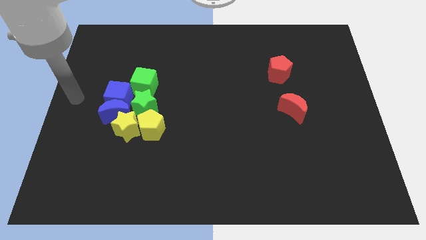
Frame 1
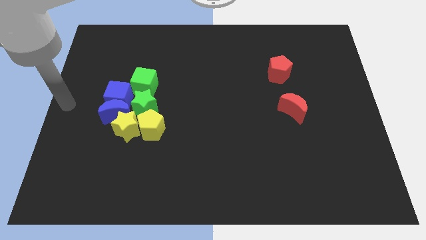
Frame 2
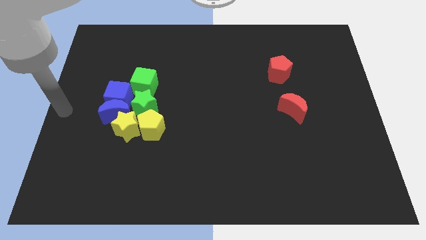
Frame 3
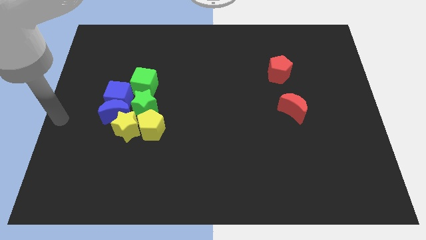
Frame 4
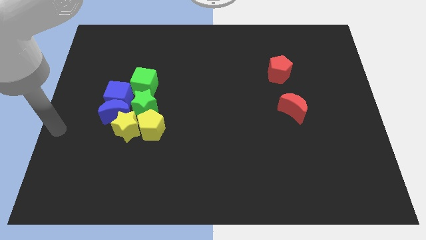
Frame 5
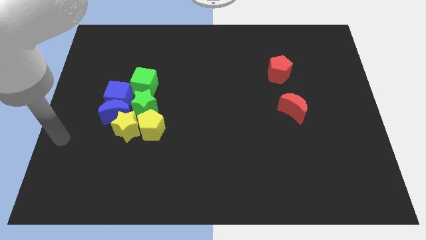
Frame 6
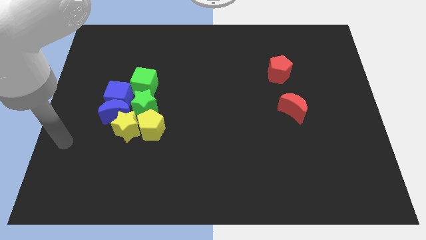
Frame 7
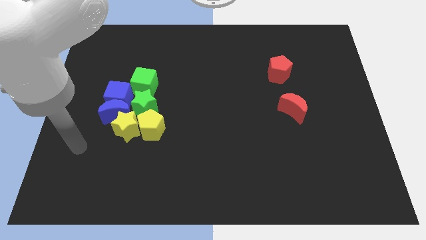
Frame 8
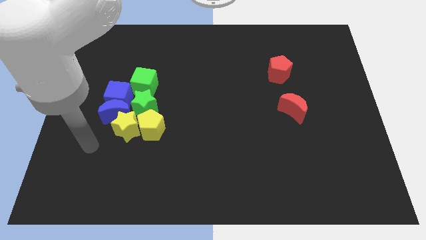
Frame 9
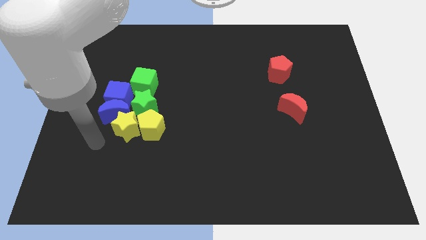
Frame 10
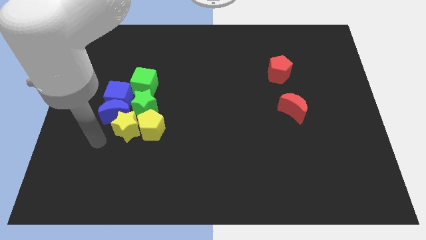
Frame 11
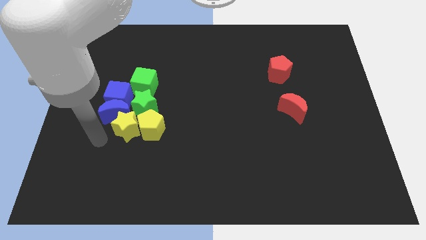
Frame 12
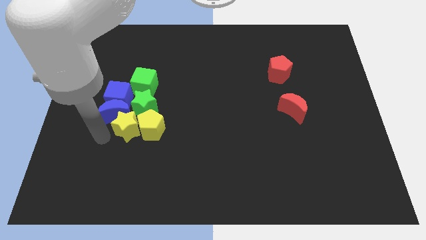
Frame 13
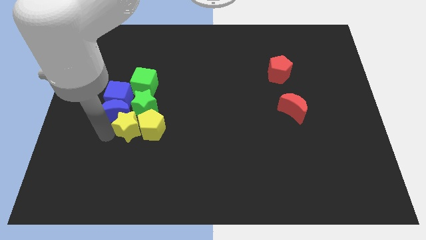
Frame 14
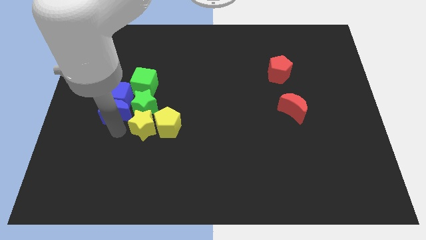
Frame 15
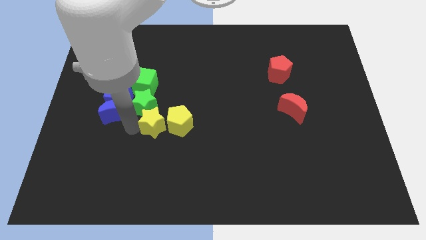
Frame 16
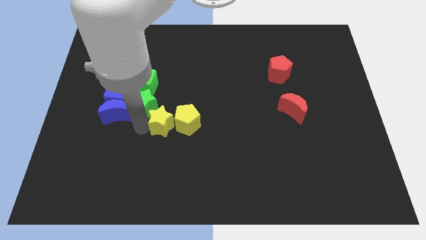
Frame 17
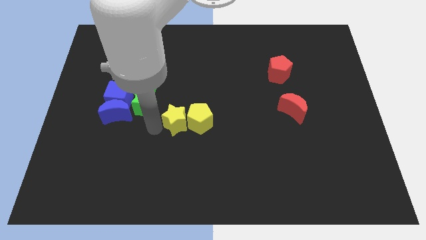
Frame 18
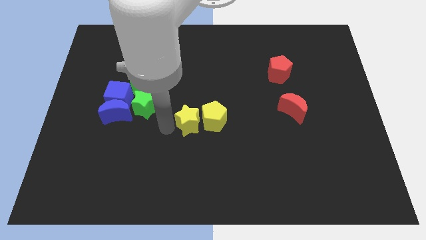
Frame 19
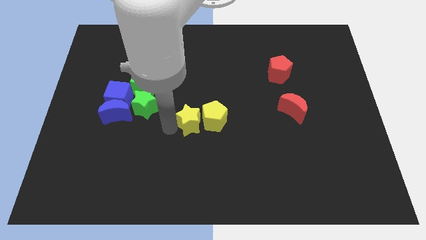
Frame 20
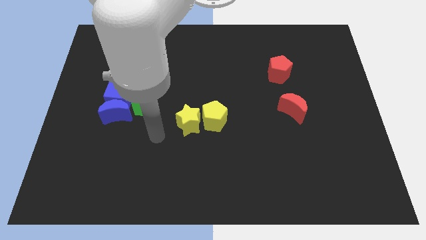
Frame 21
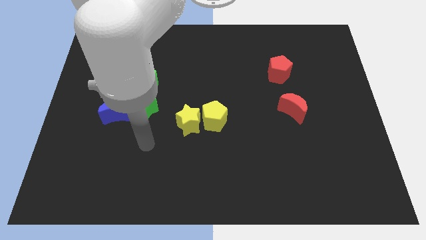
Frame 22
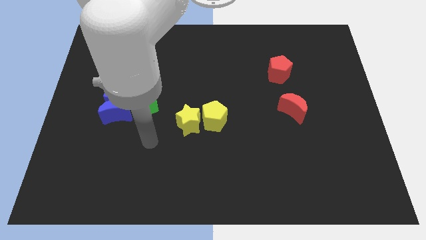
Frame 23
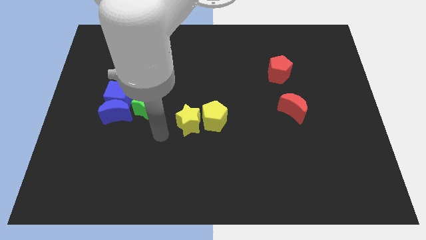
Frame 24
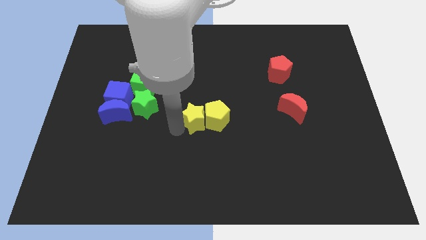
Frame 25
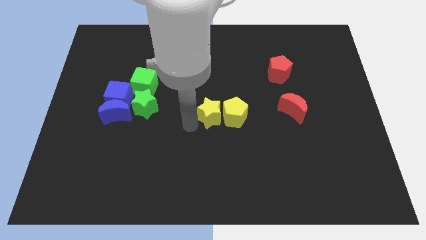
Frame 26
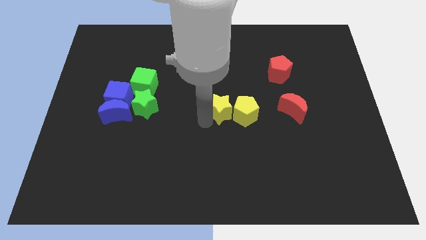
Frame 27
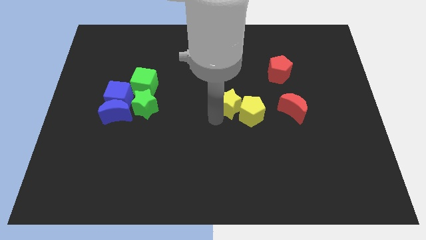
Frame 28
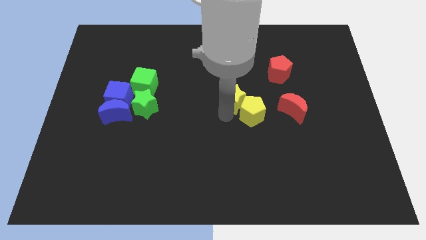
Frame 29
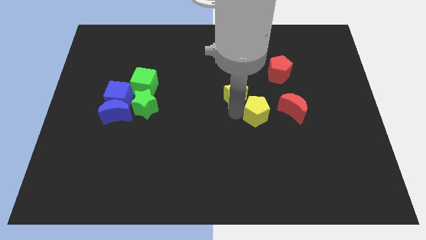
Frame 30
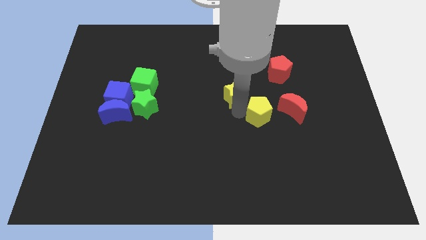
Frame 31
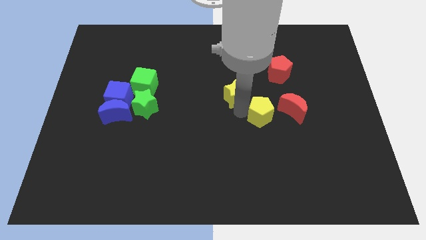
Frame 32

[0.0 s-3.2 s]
push the yellow star into the yellow pentagon

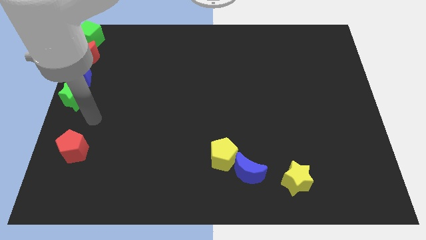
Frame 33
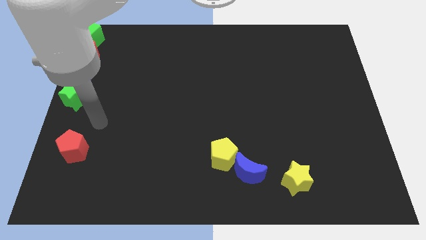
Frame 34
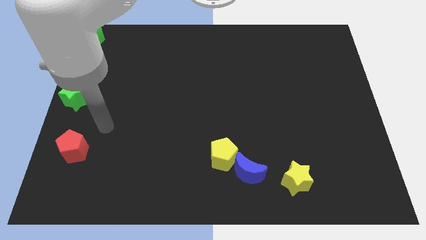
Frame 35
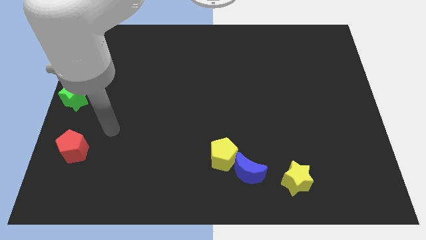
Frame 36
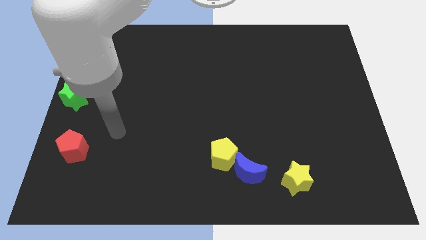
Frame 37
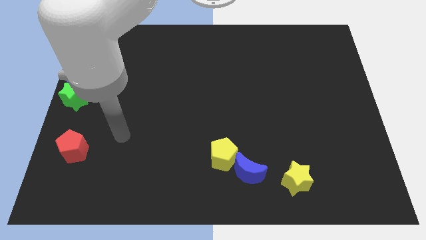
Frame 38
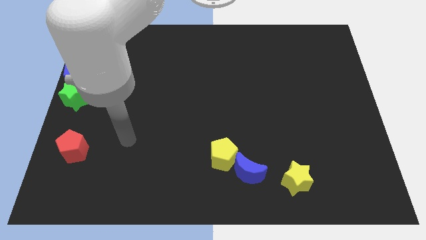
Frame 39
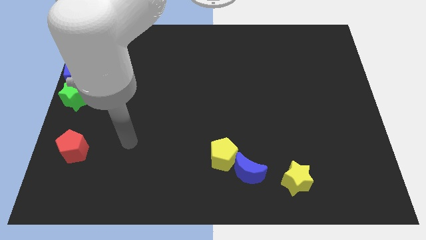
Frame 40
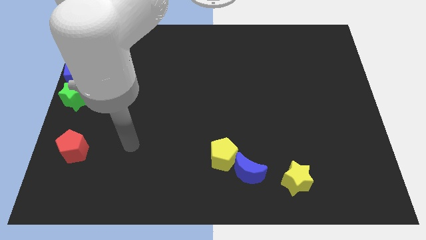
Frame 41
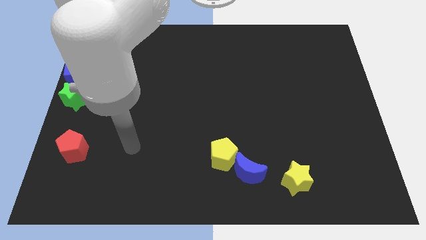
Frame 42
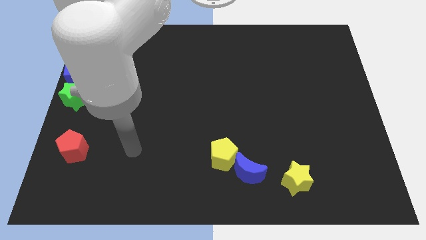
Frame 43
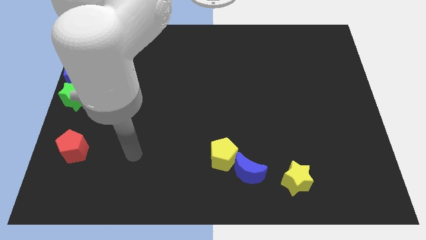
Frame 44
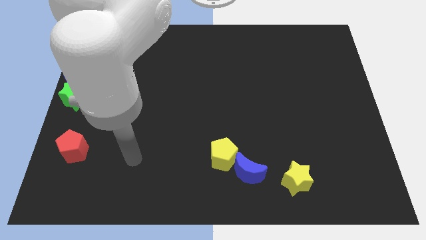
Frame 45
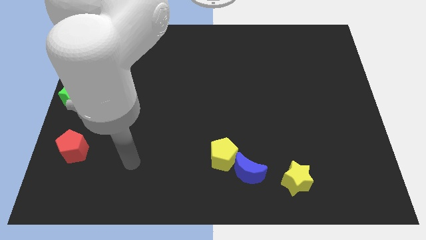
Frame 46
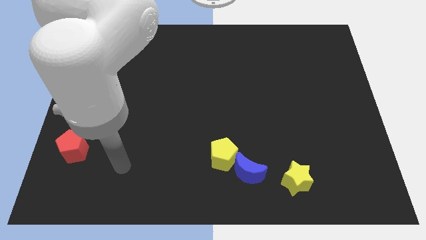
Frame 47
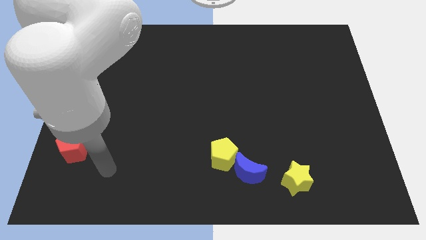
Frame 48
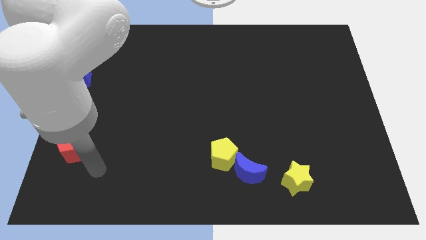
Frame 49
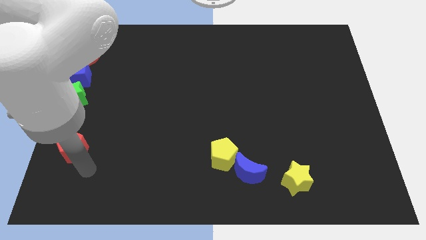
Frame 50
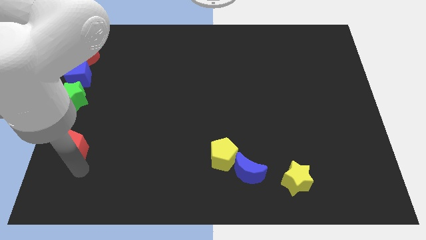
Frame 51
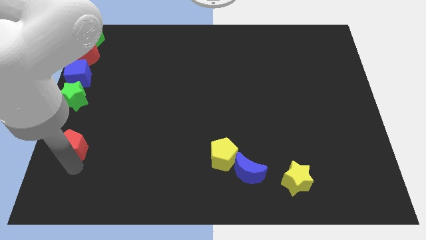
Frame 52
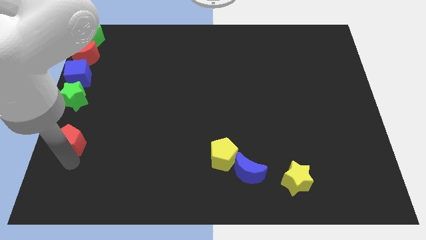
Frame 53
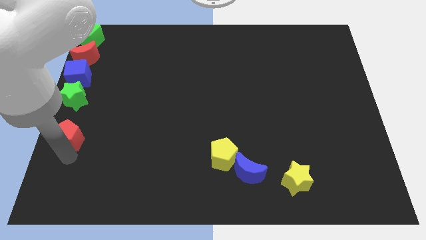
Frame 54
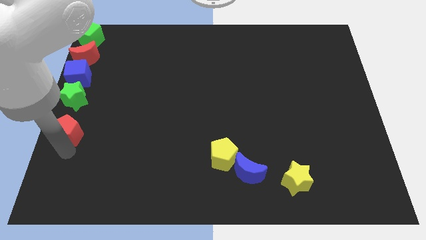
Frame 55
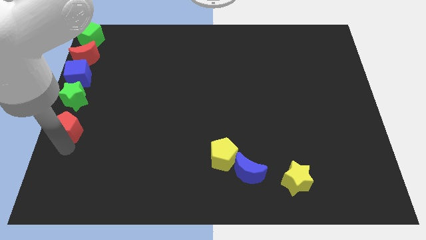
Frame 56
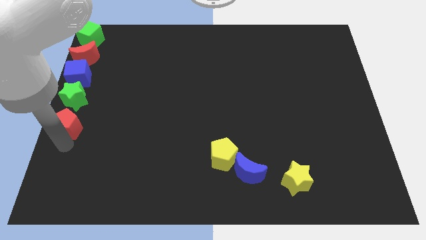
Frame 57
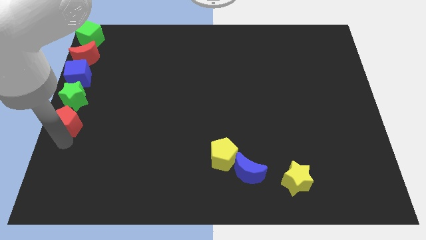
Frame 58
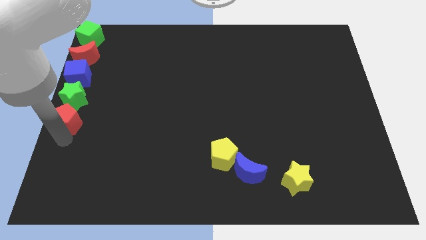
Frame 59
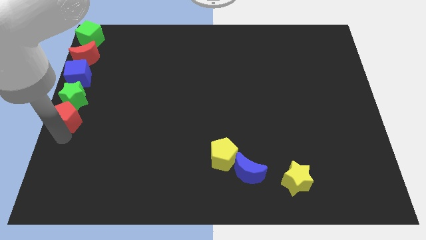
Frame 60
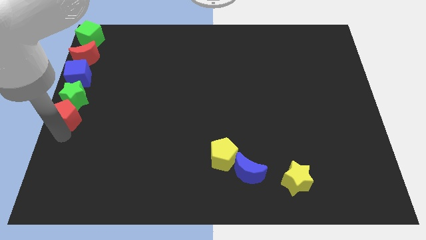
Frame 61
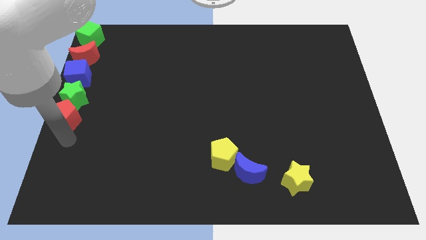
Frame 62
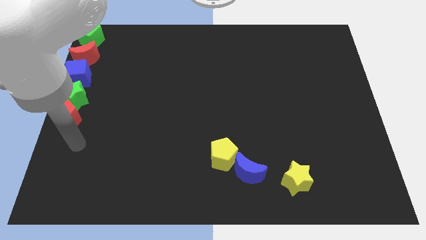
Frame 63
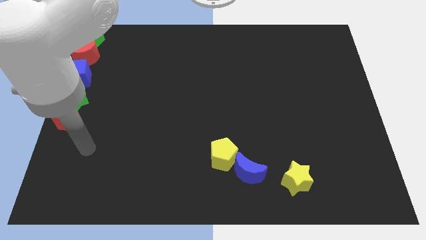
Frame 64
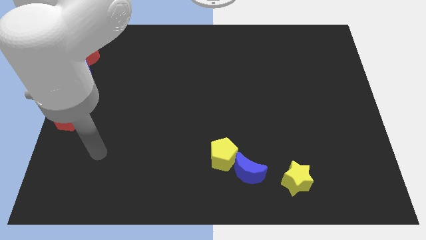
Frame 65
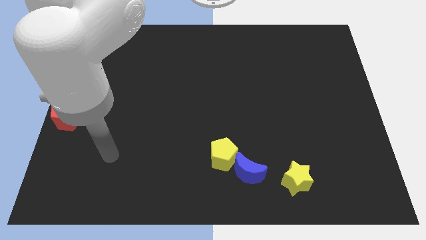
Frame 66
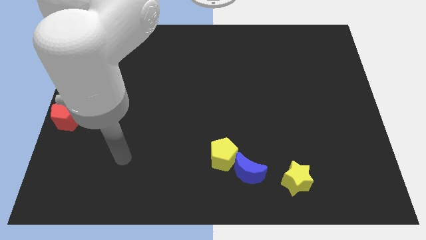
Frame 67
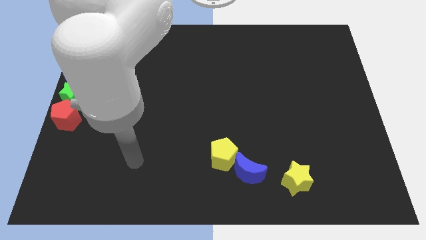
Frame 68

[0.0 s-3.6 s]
place the red pentagon to the bottom side of the green star

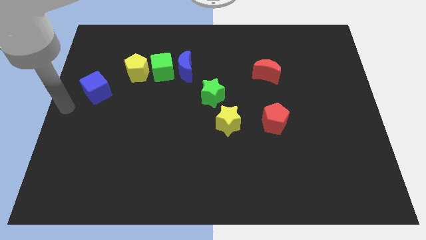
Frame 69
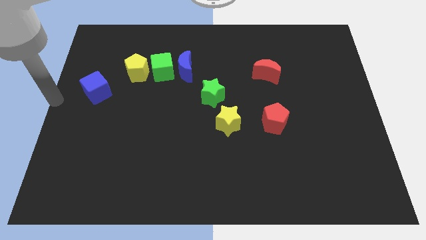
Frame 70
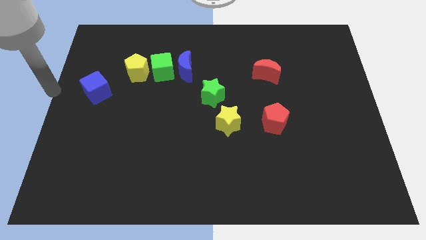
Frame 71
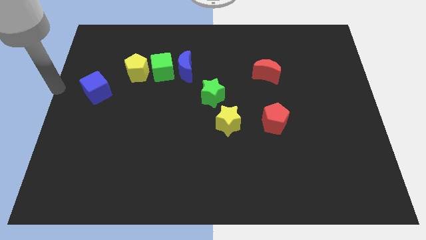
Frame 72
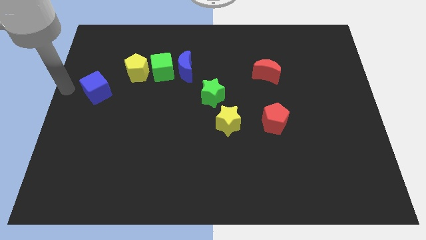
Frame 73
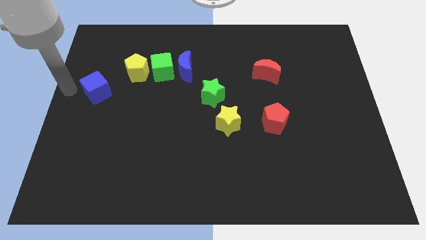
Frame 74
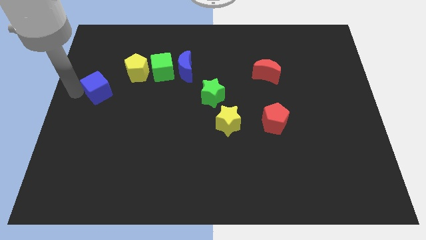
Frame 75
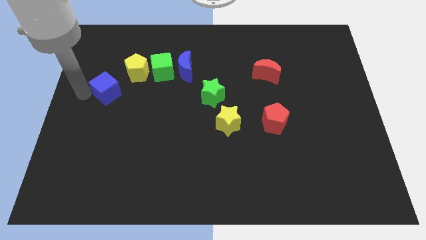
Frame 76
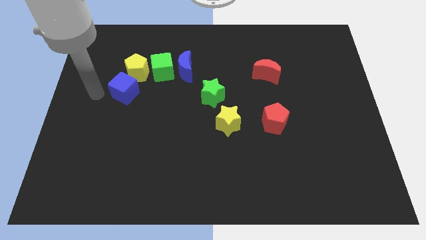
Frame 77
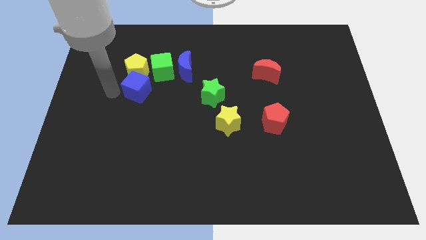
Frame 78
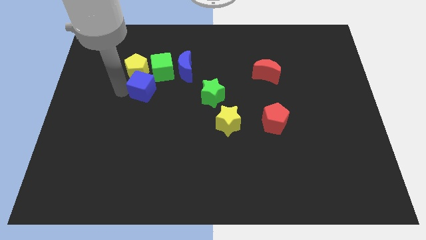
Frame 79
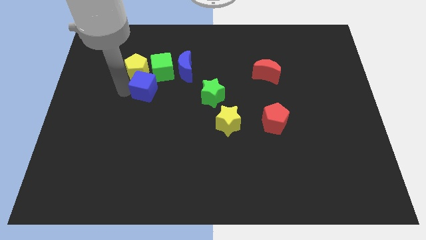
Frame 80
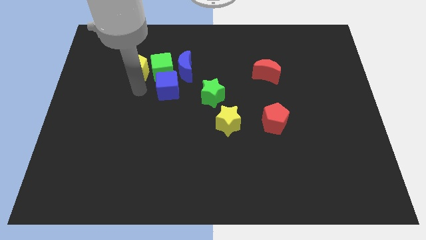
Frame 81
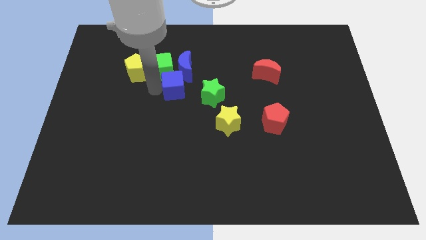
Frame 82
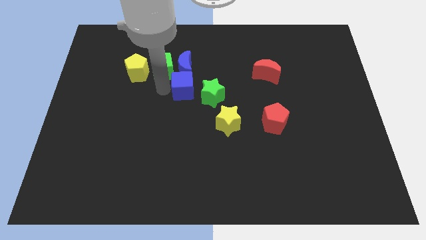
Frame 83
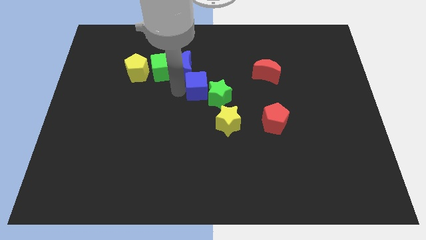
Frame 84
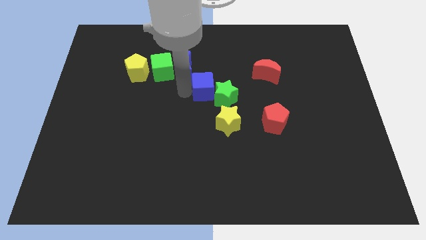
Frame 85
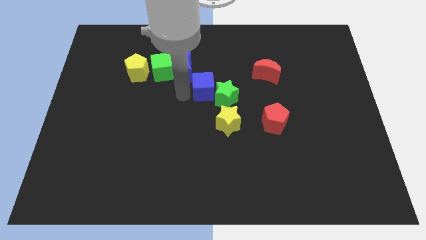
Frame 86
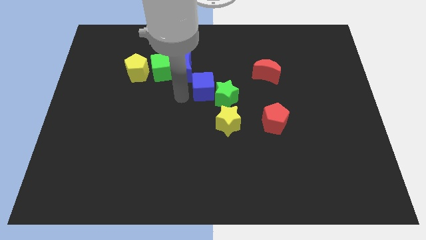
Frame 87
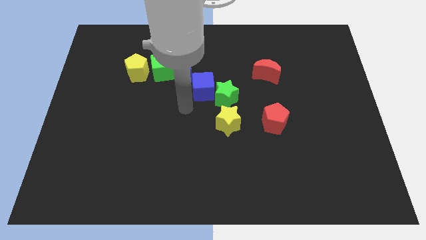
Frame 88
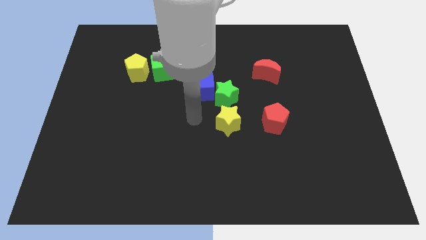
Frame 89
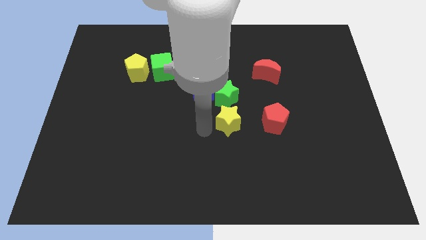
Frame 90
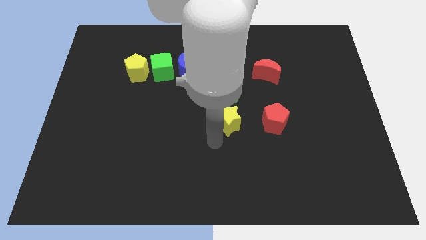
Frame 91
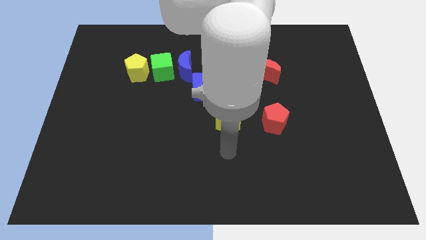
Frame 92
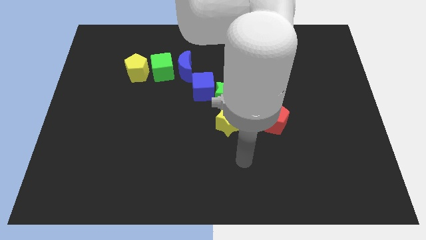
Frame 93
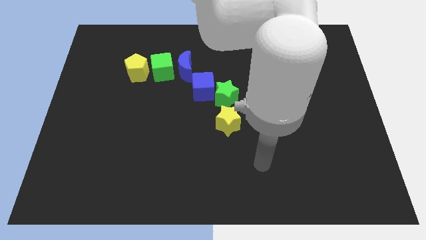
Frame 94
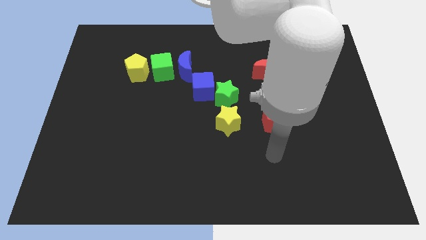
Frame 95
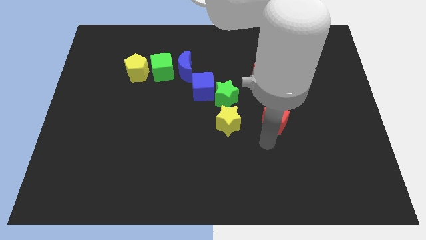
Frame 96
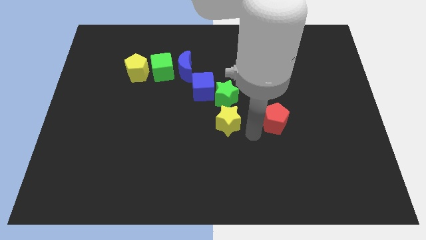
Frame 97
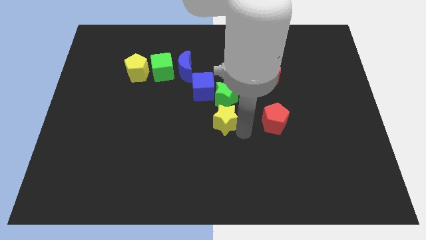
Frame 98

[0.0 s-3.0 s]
push the blue cube to the center of the board
